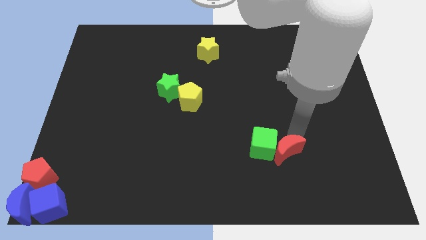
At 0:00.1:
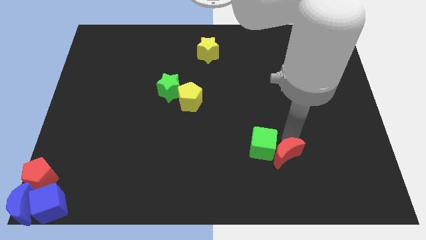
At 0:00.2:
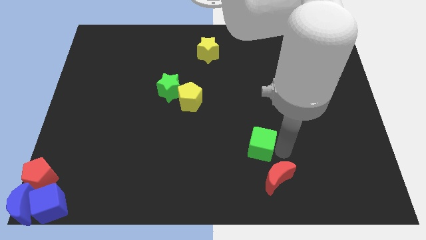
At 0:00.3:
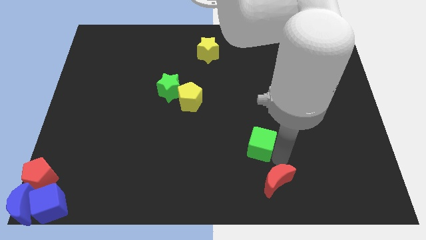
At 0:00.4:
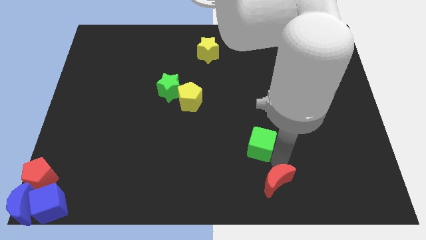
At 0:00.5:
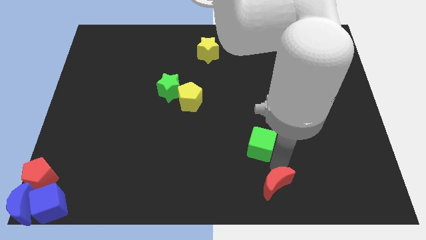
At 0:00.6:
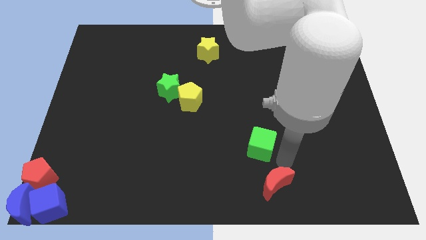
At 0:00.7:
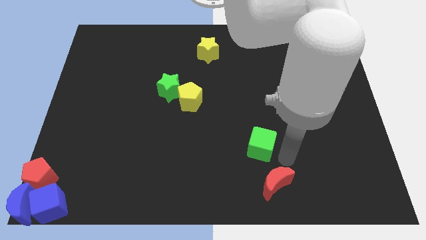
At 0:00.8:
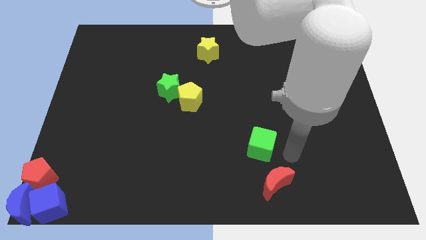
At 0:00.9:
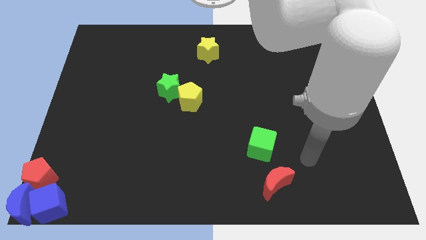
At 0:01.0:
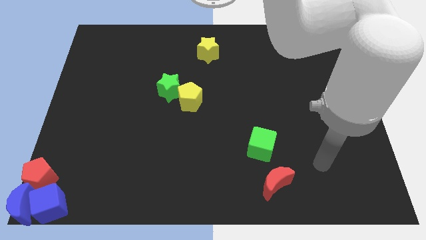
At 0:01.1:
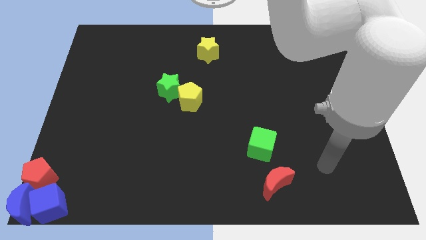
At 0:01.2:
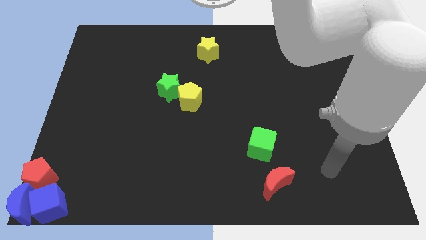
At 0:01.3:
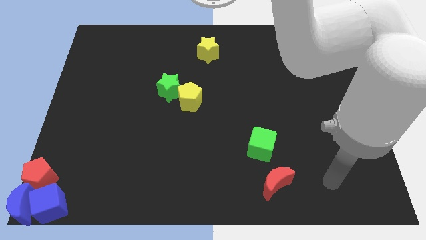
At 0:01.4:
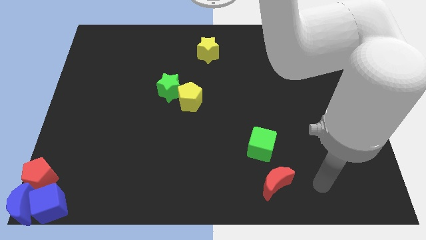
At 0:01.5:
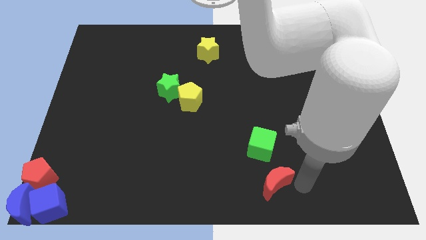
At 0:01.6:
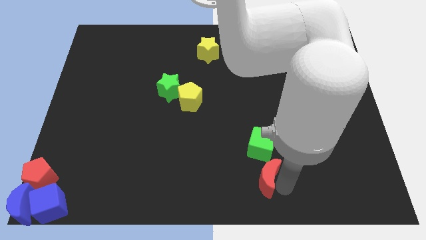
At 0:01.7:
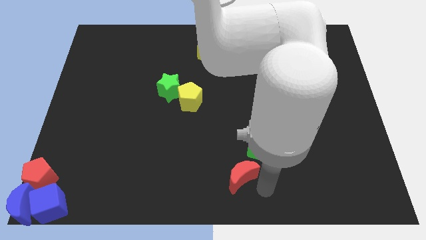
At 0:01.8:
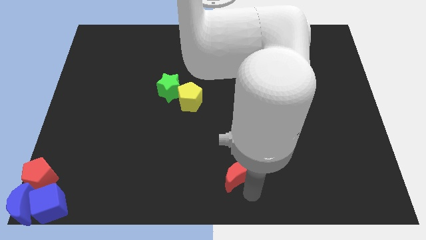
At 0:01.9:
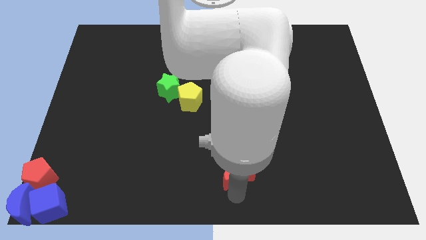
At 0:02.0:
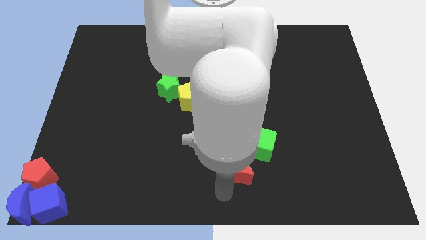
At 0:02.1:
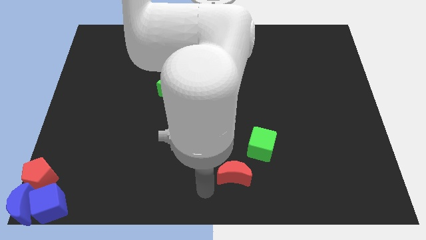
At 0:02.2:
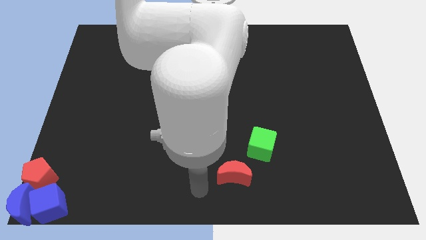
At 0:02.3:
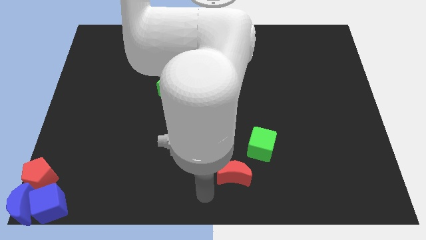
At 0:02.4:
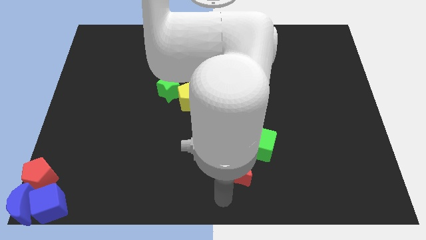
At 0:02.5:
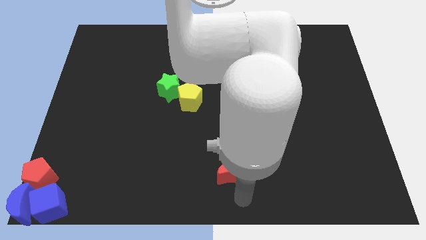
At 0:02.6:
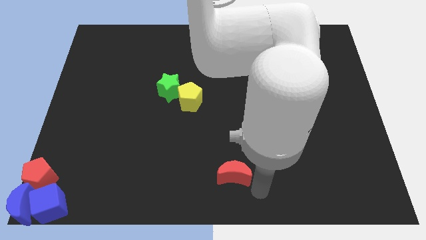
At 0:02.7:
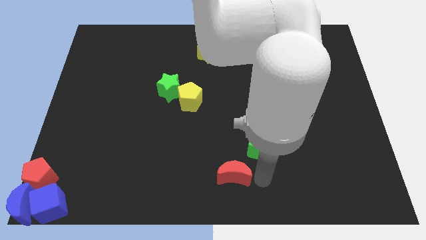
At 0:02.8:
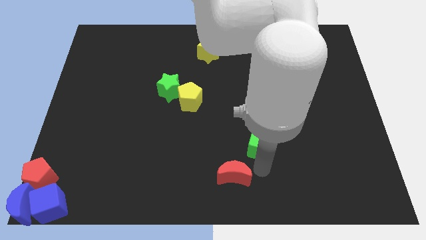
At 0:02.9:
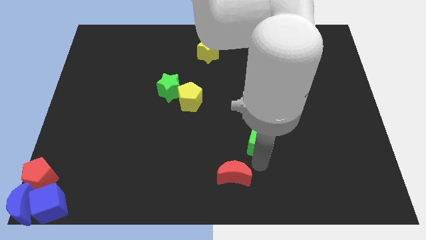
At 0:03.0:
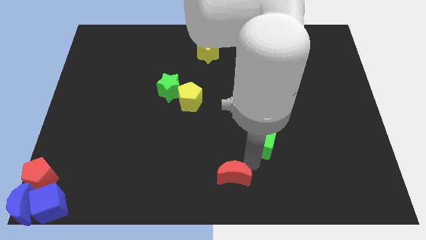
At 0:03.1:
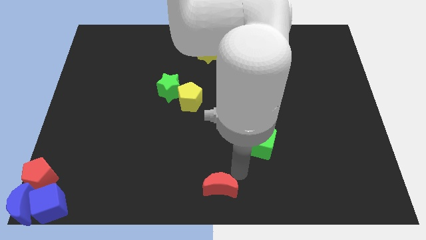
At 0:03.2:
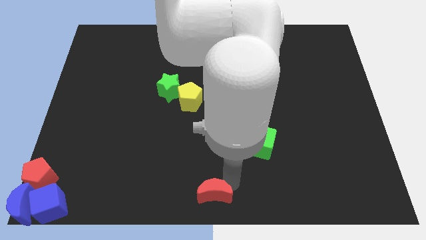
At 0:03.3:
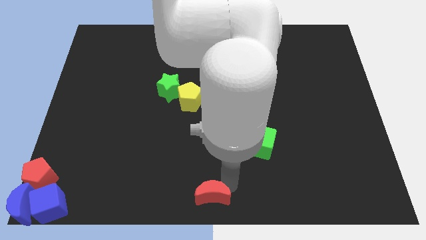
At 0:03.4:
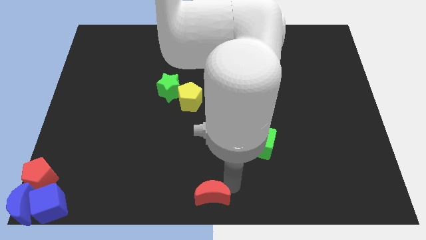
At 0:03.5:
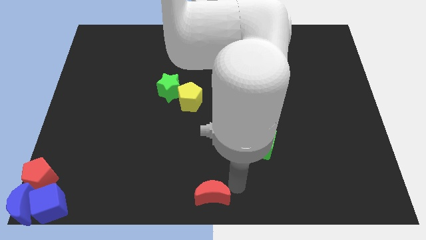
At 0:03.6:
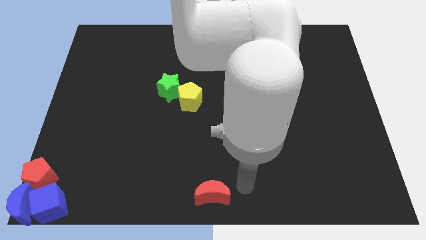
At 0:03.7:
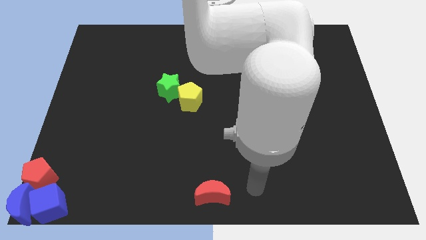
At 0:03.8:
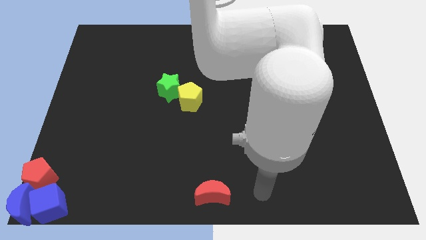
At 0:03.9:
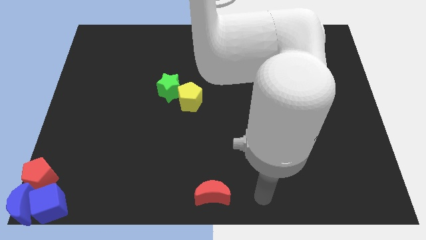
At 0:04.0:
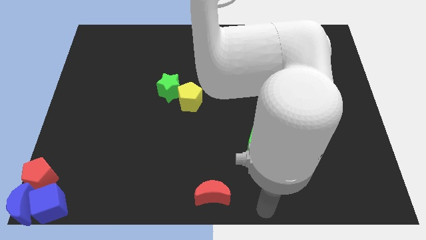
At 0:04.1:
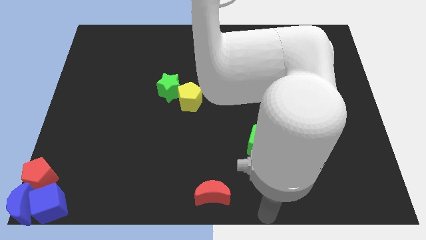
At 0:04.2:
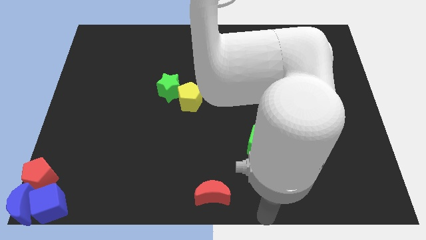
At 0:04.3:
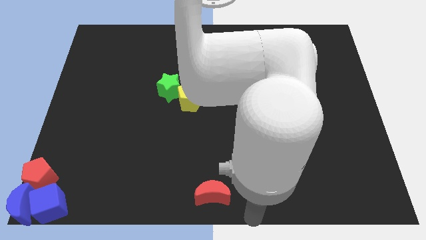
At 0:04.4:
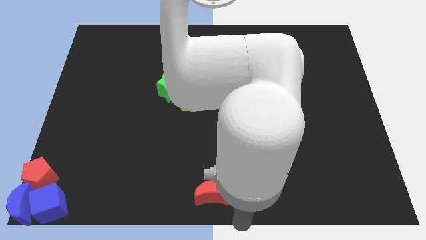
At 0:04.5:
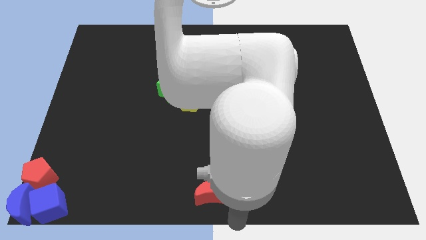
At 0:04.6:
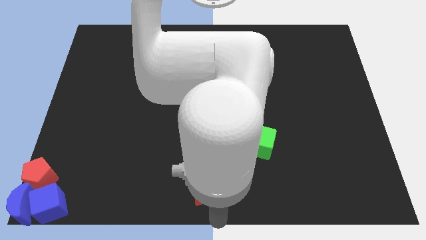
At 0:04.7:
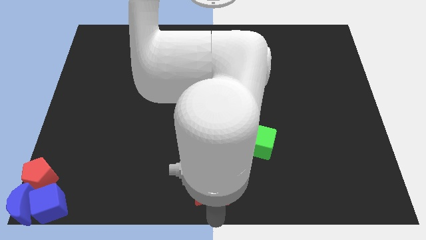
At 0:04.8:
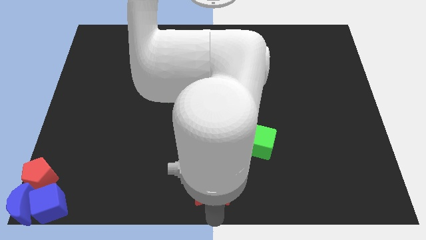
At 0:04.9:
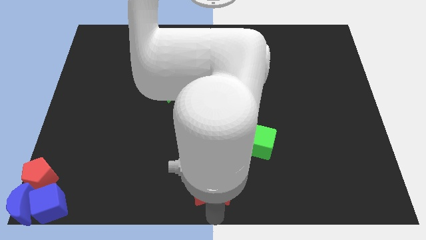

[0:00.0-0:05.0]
move the red crescent to the bottom center of the board

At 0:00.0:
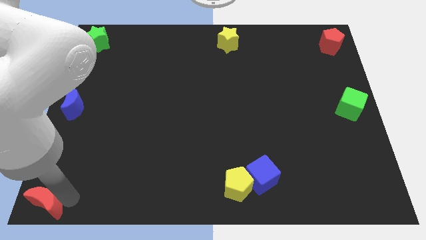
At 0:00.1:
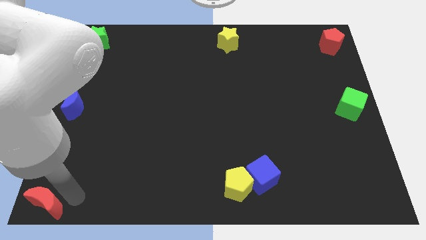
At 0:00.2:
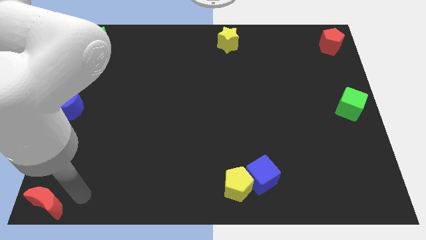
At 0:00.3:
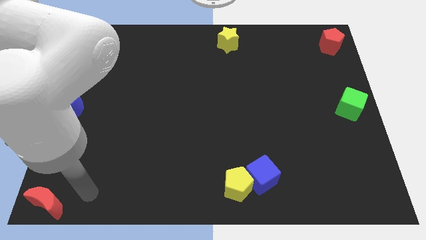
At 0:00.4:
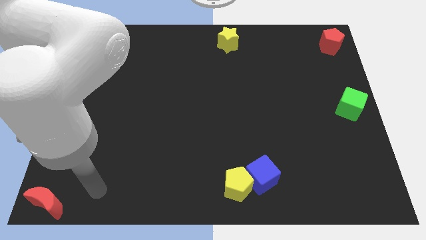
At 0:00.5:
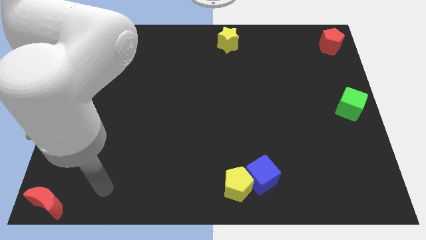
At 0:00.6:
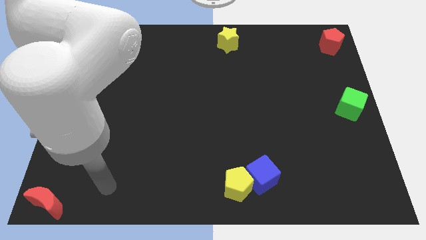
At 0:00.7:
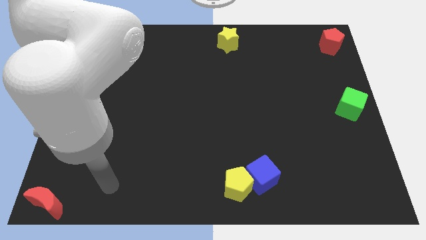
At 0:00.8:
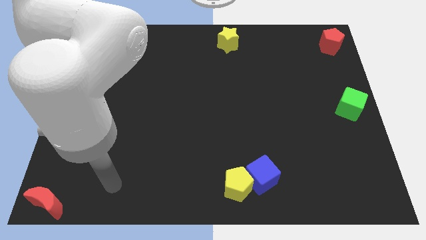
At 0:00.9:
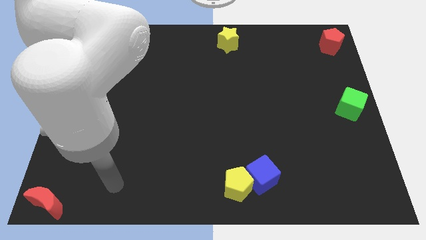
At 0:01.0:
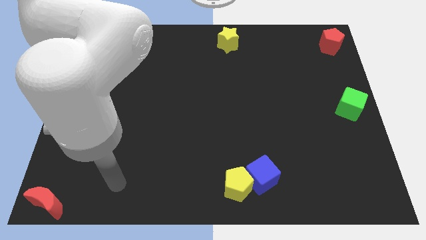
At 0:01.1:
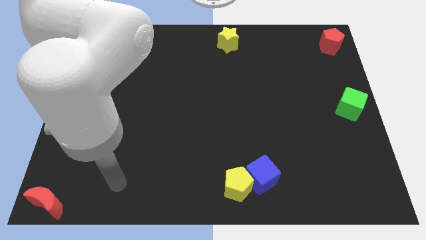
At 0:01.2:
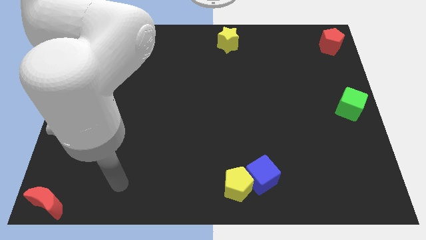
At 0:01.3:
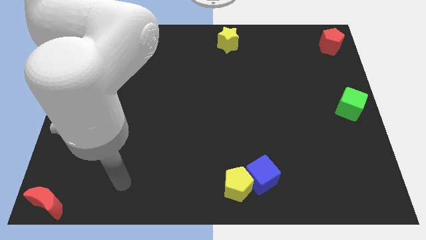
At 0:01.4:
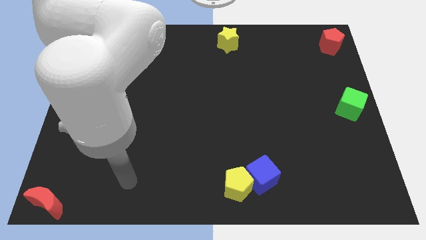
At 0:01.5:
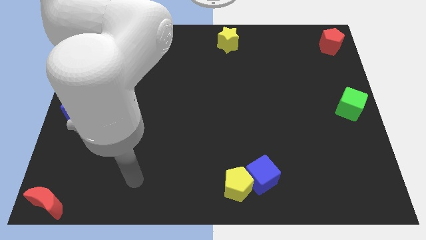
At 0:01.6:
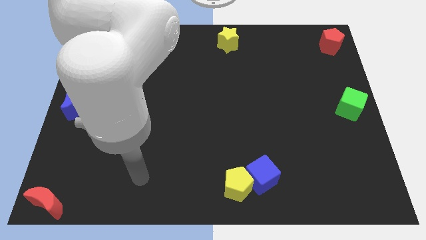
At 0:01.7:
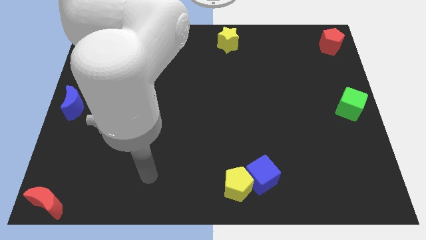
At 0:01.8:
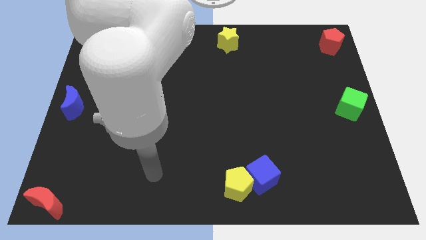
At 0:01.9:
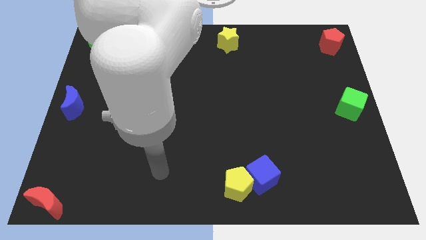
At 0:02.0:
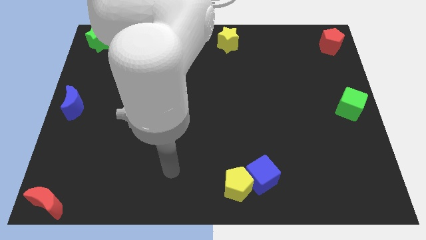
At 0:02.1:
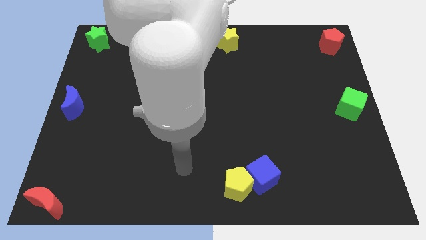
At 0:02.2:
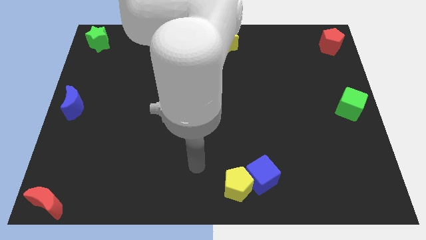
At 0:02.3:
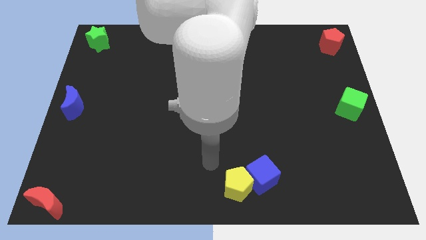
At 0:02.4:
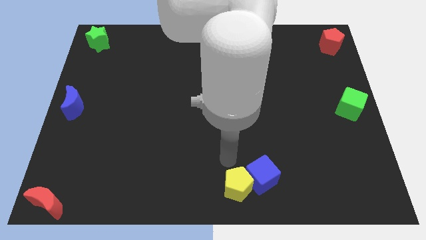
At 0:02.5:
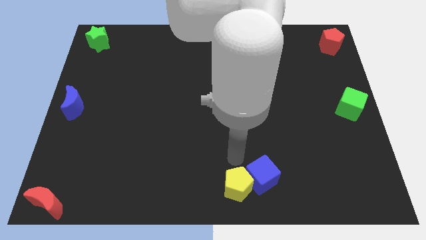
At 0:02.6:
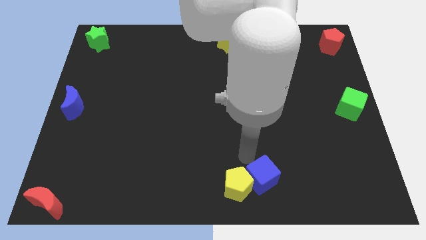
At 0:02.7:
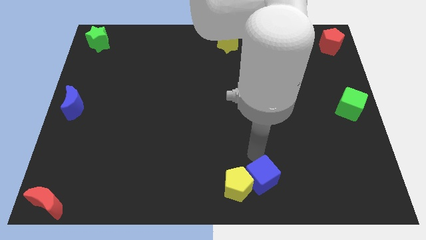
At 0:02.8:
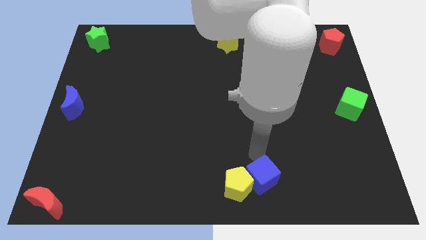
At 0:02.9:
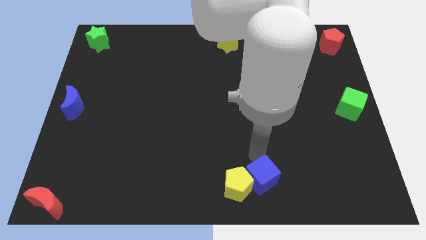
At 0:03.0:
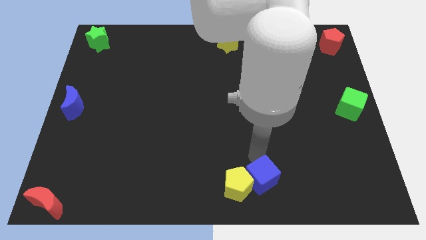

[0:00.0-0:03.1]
move your arm away from the red crescent

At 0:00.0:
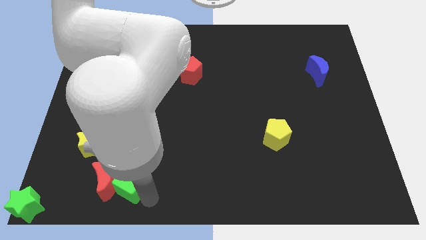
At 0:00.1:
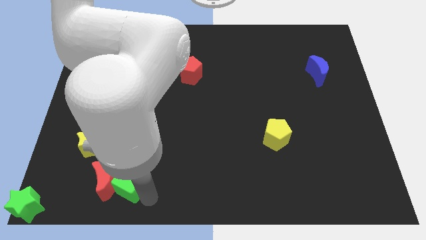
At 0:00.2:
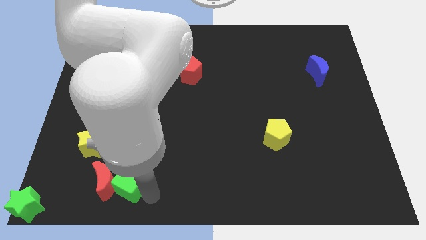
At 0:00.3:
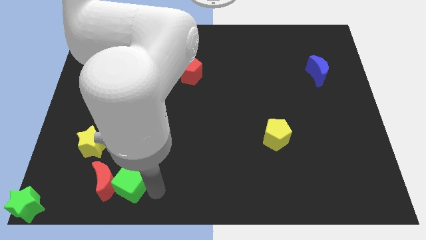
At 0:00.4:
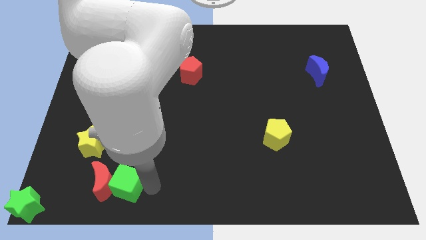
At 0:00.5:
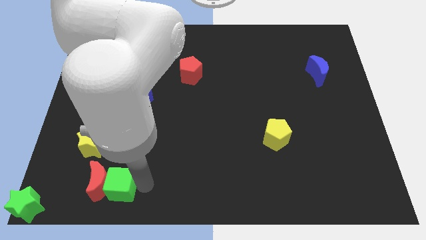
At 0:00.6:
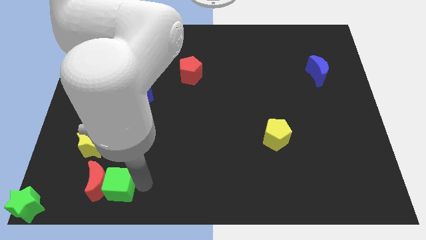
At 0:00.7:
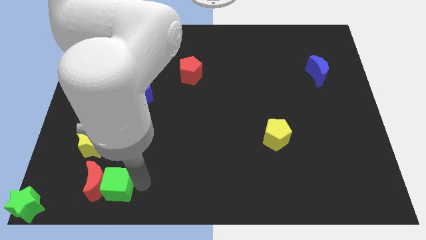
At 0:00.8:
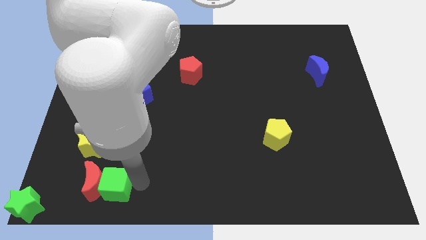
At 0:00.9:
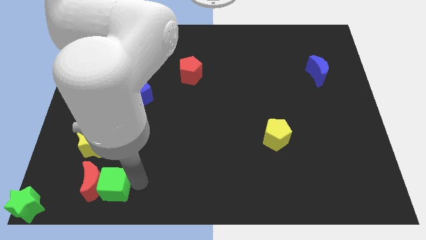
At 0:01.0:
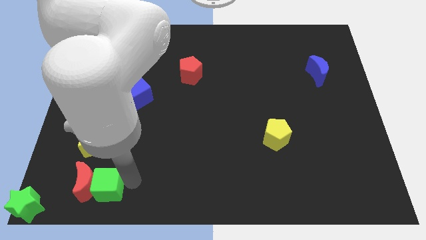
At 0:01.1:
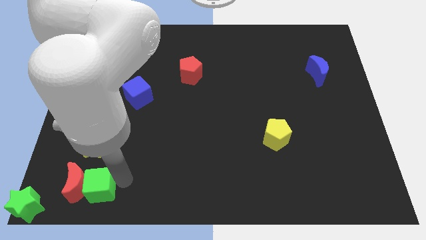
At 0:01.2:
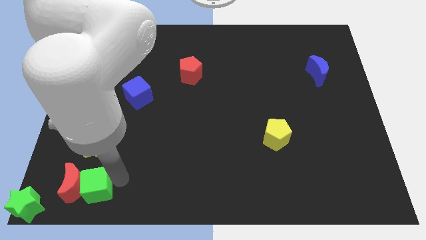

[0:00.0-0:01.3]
push the red crescent and the green cube together to the bottom of the yellow star
